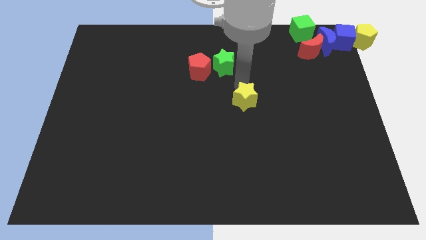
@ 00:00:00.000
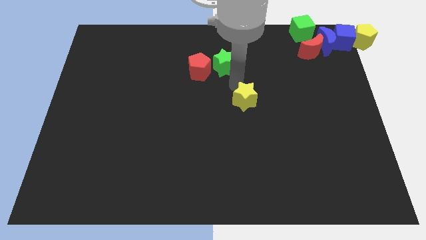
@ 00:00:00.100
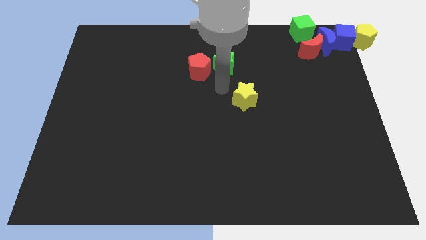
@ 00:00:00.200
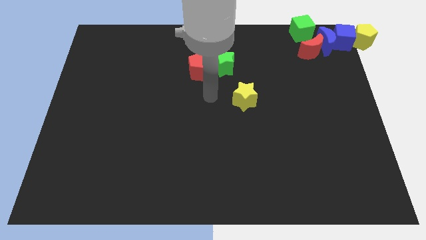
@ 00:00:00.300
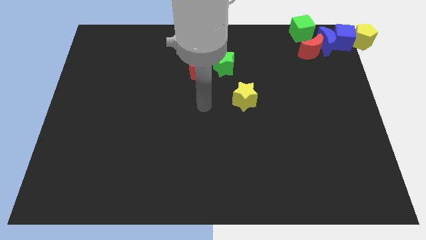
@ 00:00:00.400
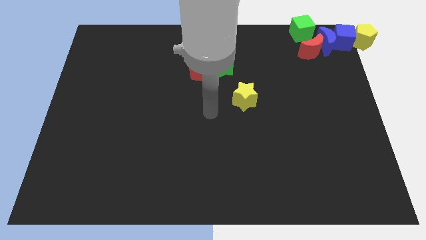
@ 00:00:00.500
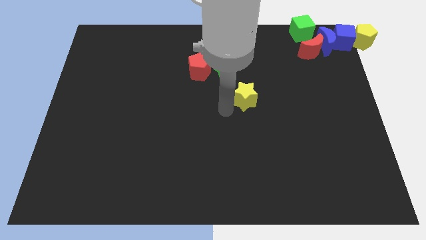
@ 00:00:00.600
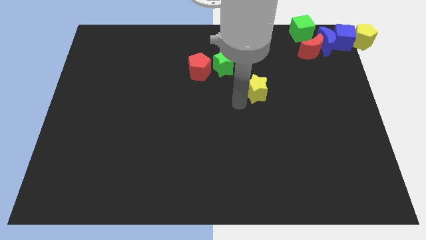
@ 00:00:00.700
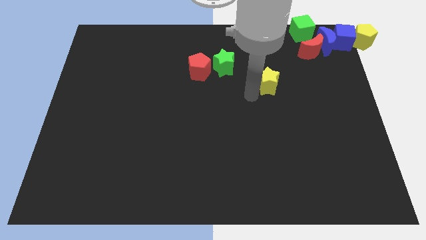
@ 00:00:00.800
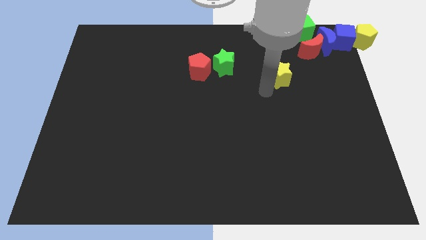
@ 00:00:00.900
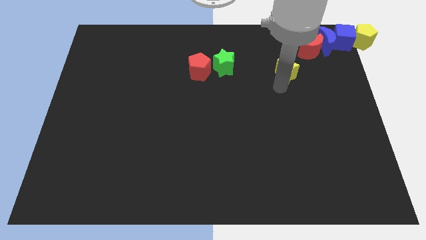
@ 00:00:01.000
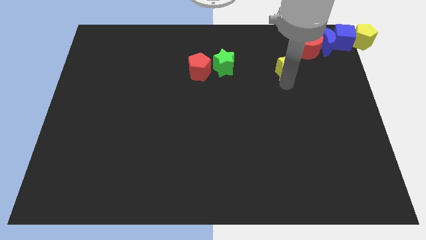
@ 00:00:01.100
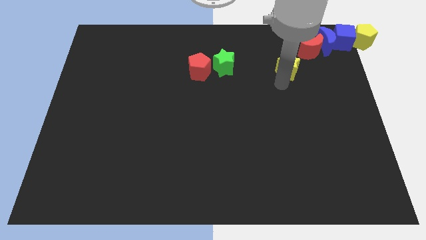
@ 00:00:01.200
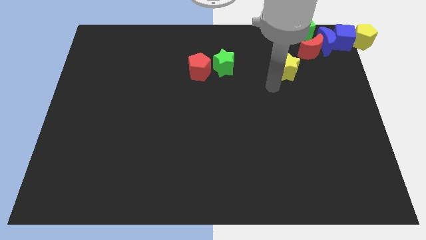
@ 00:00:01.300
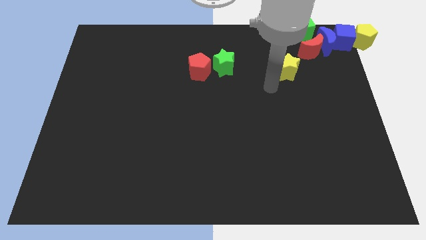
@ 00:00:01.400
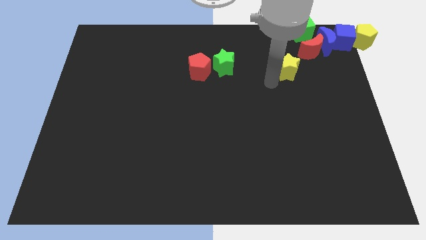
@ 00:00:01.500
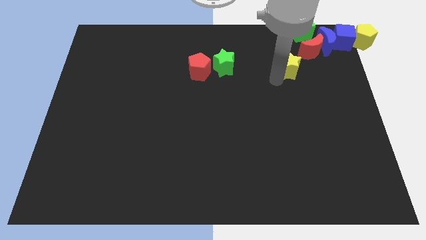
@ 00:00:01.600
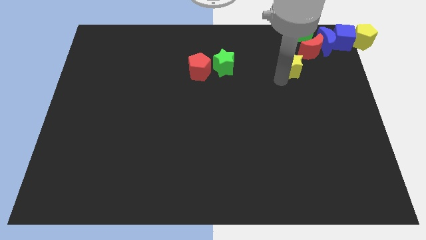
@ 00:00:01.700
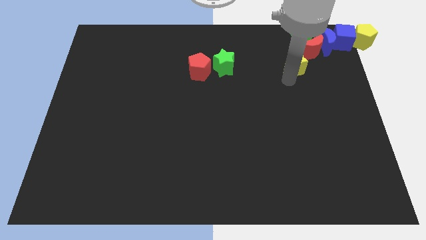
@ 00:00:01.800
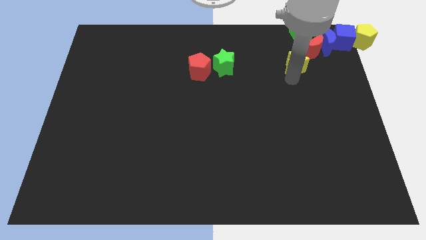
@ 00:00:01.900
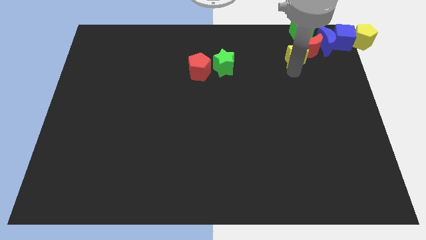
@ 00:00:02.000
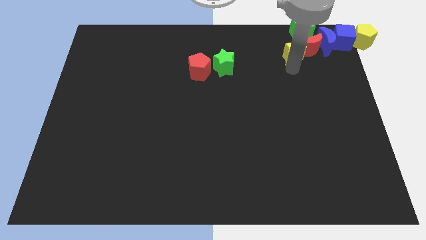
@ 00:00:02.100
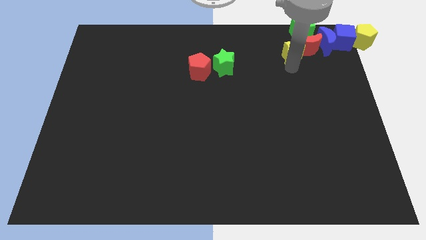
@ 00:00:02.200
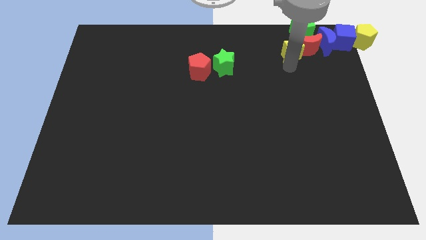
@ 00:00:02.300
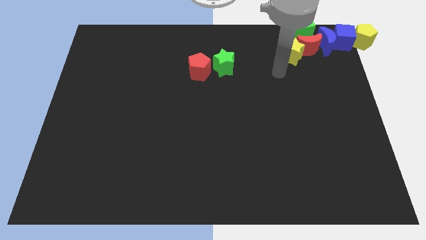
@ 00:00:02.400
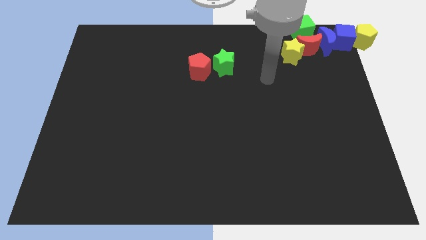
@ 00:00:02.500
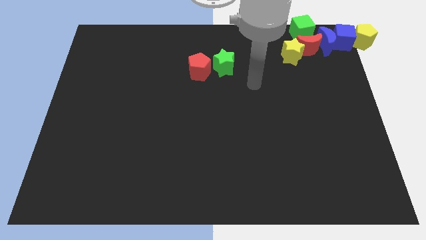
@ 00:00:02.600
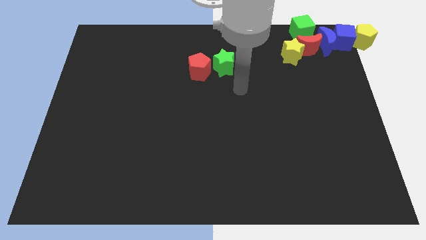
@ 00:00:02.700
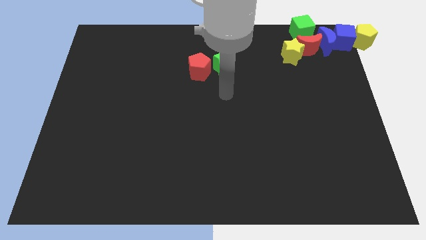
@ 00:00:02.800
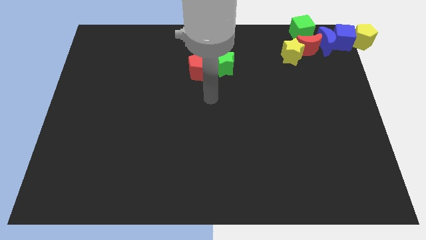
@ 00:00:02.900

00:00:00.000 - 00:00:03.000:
move the yellow star bottom left to the red crescent

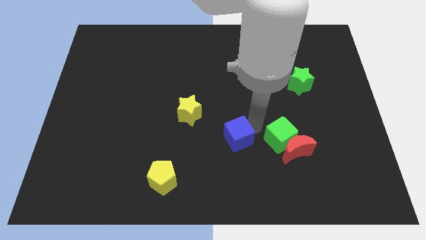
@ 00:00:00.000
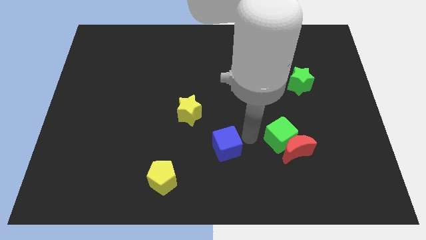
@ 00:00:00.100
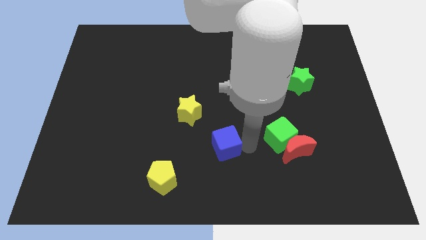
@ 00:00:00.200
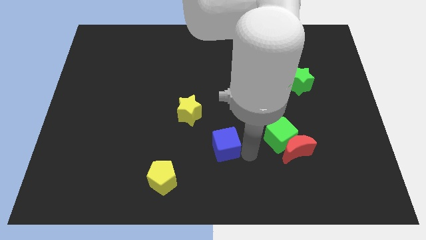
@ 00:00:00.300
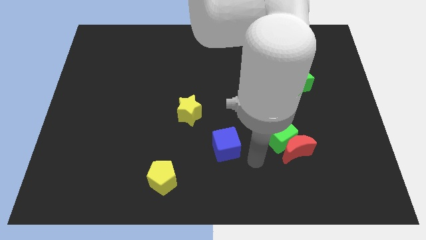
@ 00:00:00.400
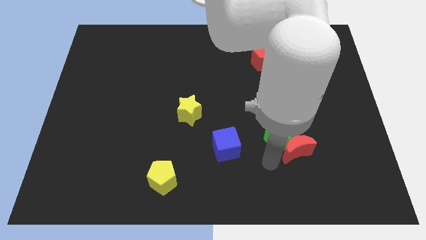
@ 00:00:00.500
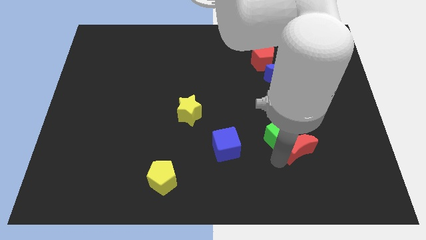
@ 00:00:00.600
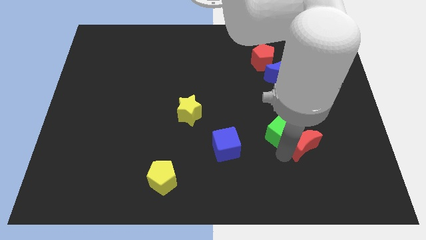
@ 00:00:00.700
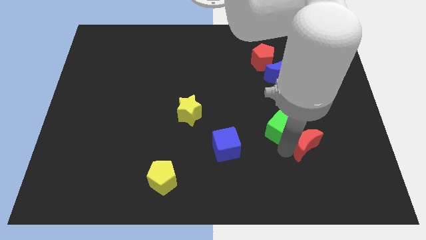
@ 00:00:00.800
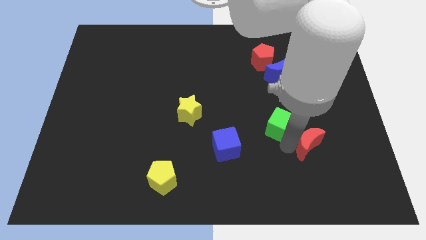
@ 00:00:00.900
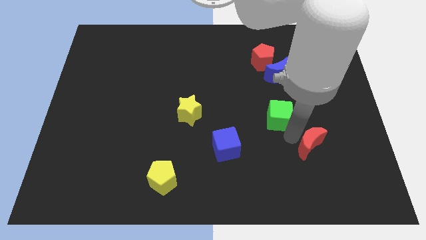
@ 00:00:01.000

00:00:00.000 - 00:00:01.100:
separate green and blue cubes

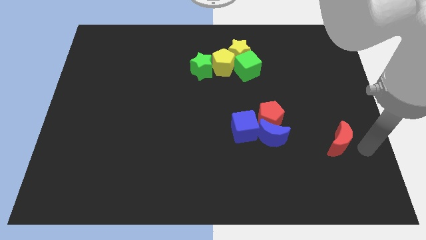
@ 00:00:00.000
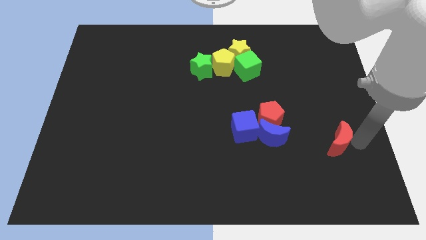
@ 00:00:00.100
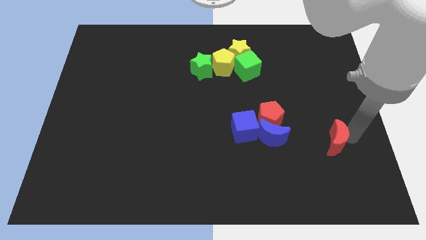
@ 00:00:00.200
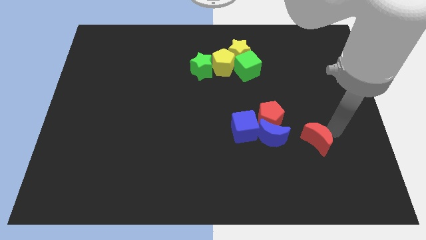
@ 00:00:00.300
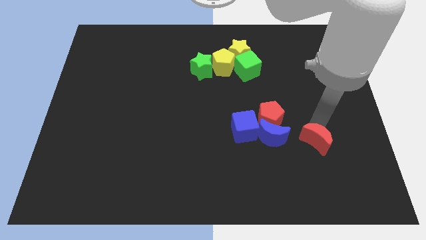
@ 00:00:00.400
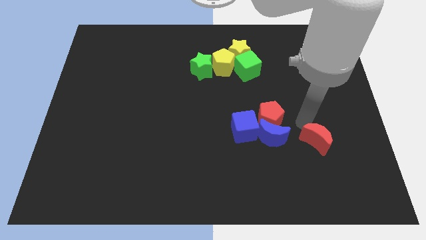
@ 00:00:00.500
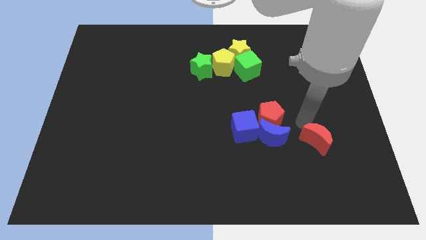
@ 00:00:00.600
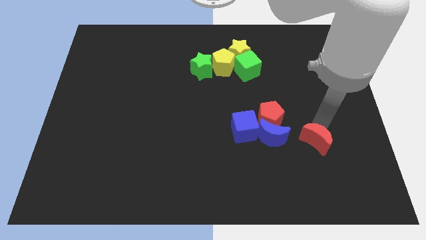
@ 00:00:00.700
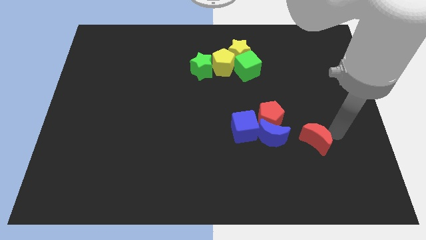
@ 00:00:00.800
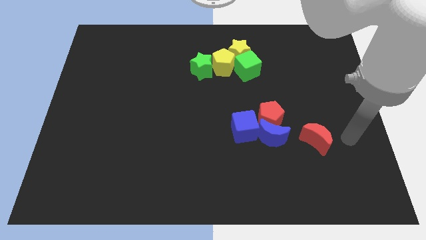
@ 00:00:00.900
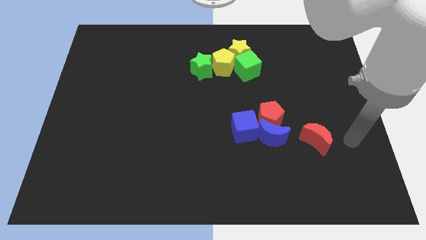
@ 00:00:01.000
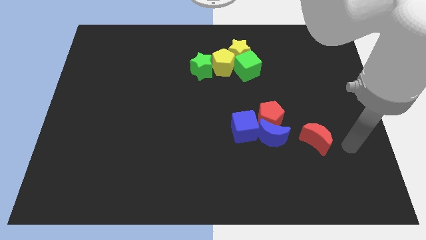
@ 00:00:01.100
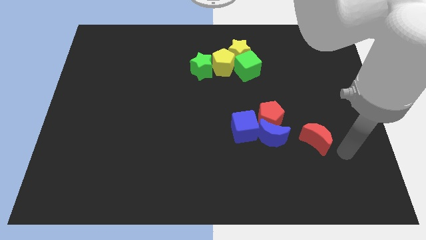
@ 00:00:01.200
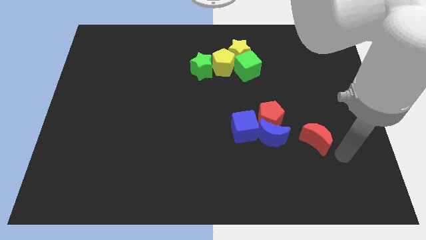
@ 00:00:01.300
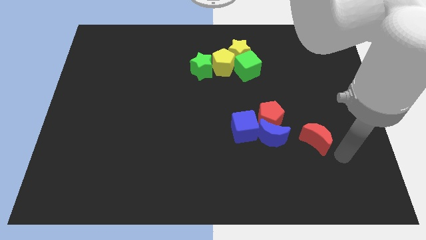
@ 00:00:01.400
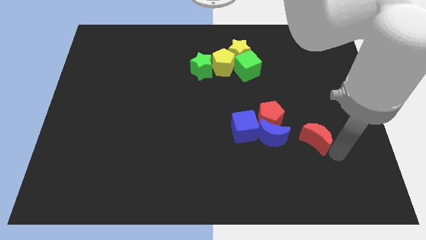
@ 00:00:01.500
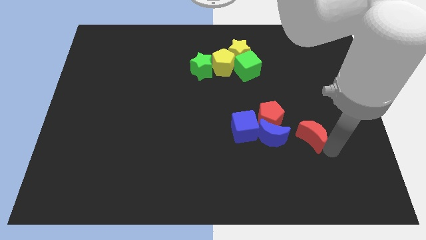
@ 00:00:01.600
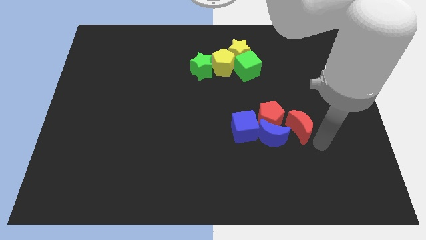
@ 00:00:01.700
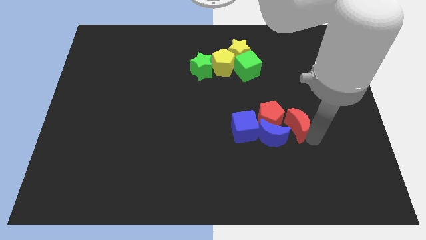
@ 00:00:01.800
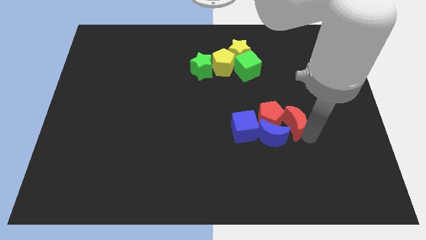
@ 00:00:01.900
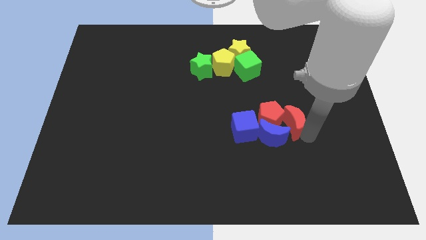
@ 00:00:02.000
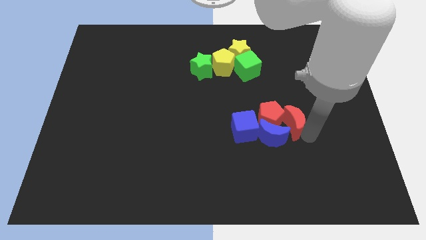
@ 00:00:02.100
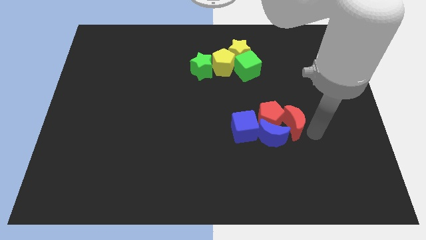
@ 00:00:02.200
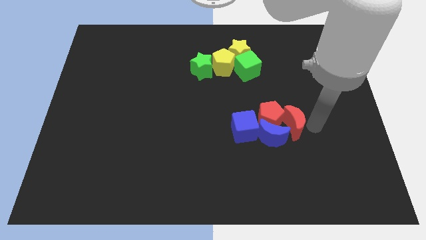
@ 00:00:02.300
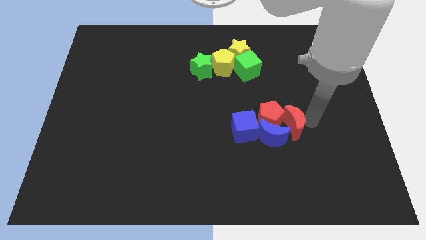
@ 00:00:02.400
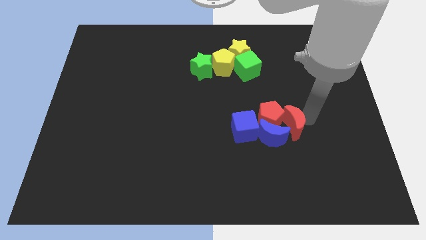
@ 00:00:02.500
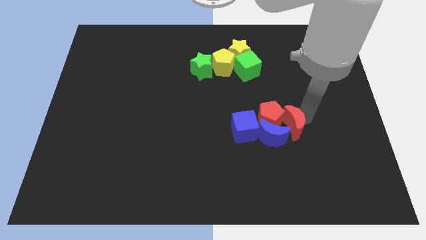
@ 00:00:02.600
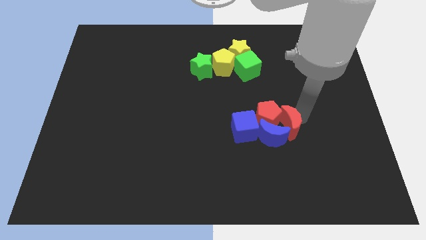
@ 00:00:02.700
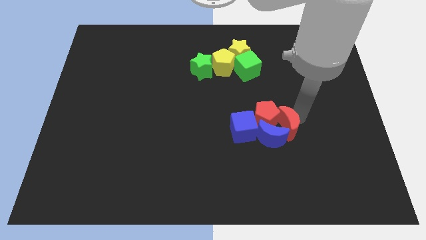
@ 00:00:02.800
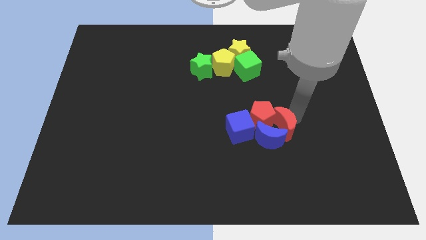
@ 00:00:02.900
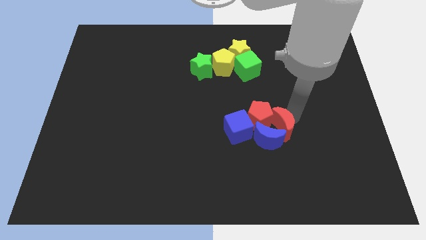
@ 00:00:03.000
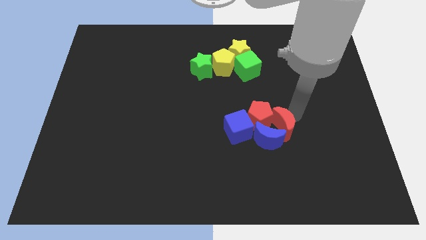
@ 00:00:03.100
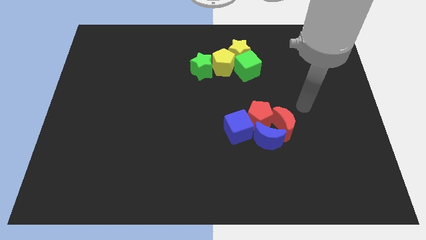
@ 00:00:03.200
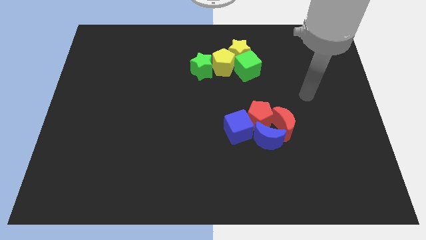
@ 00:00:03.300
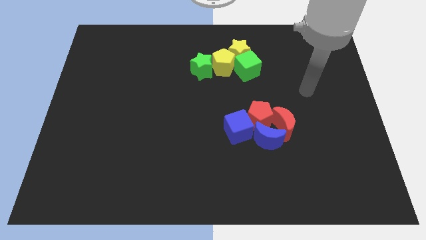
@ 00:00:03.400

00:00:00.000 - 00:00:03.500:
push red crescent into the group of blocks

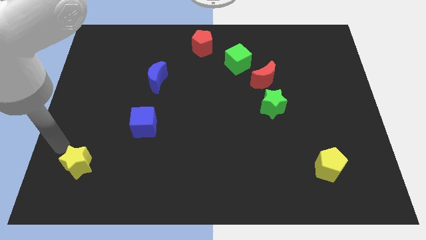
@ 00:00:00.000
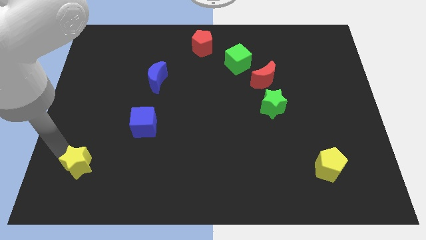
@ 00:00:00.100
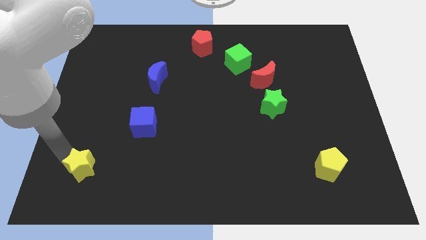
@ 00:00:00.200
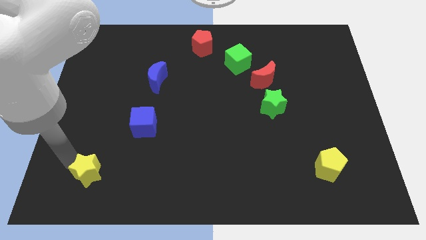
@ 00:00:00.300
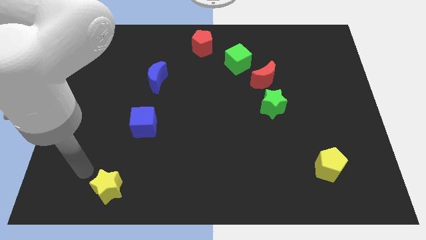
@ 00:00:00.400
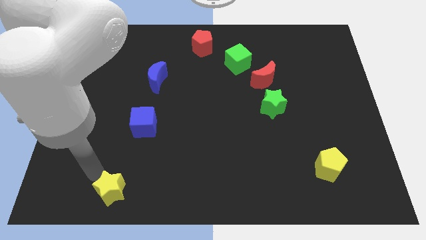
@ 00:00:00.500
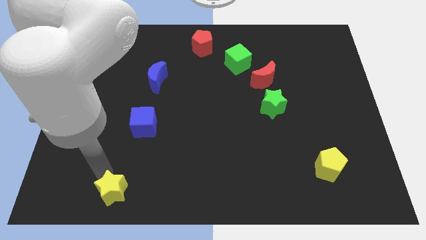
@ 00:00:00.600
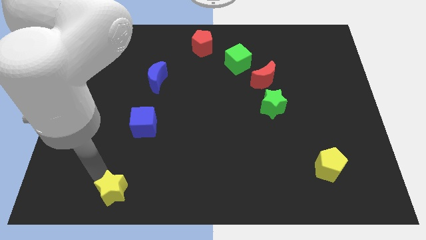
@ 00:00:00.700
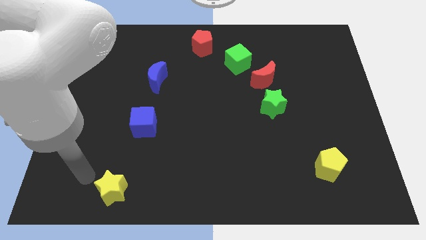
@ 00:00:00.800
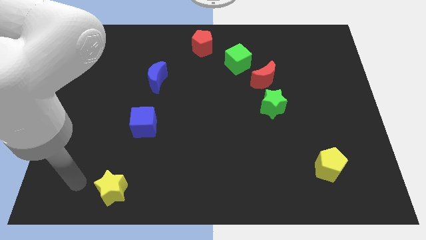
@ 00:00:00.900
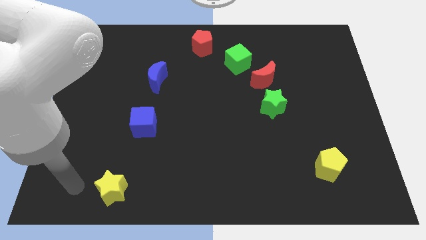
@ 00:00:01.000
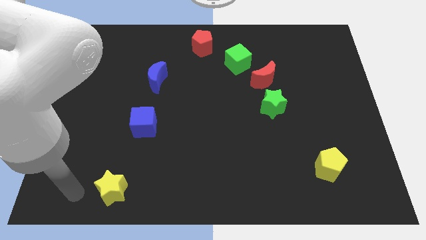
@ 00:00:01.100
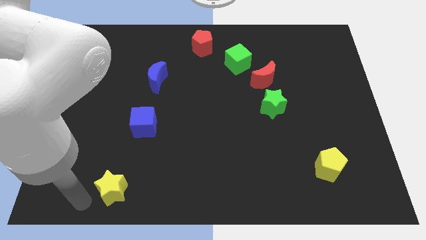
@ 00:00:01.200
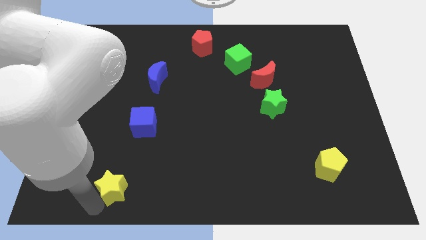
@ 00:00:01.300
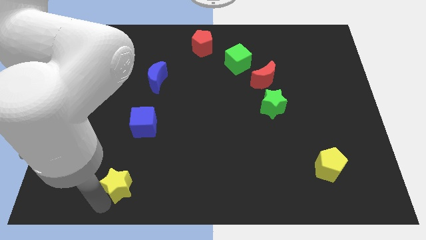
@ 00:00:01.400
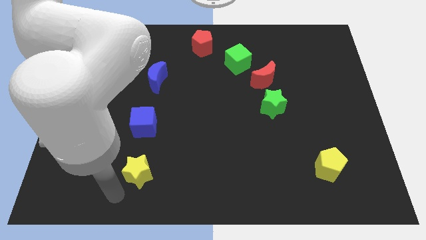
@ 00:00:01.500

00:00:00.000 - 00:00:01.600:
move the yellow star towards the bottom center
